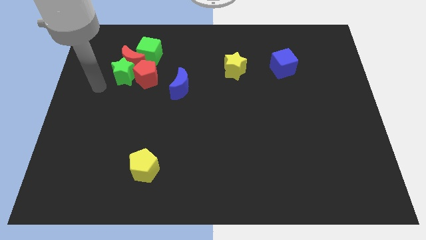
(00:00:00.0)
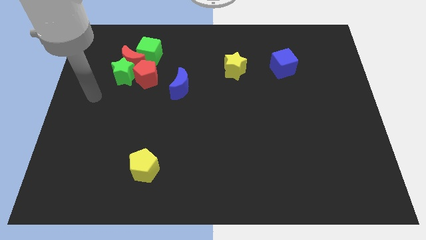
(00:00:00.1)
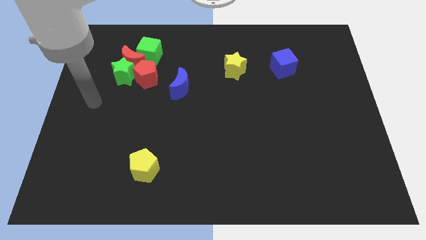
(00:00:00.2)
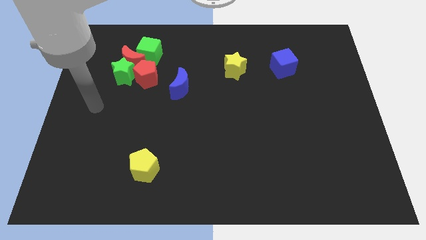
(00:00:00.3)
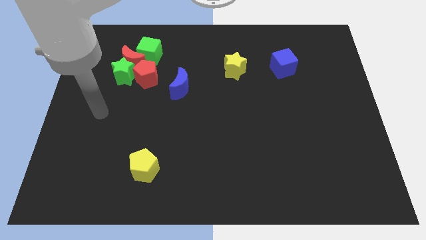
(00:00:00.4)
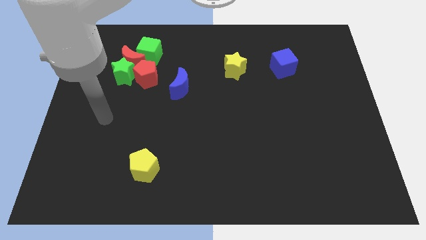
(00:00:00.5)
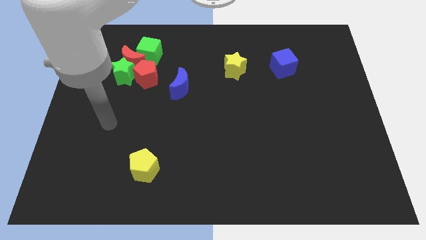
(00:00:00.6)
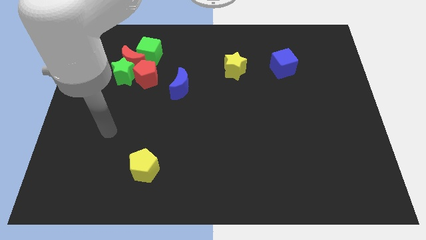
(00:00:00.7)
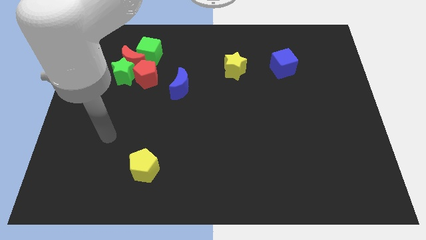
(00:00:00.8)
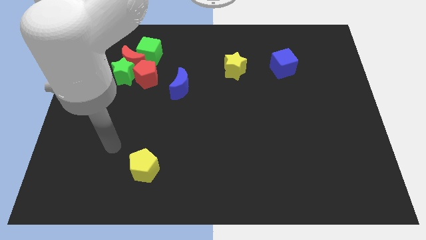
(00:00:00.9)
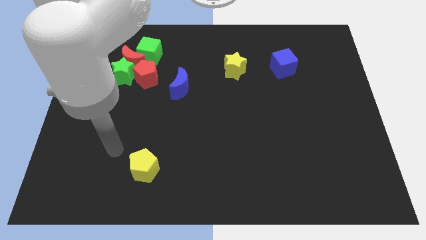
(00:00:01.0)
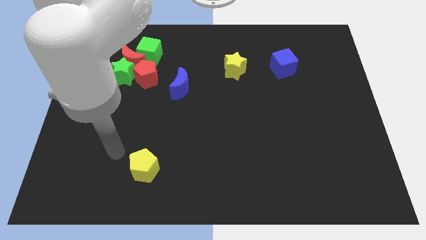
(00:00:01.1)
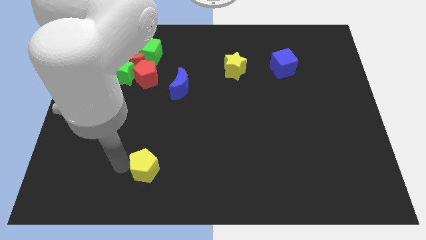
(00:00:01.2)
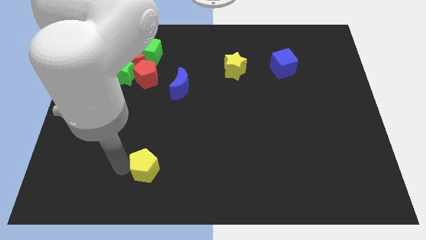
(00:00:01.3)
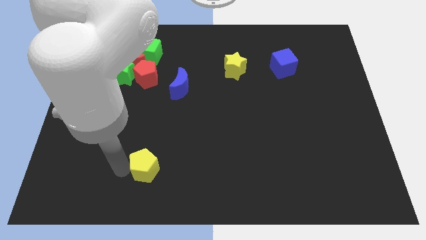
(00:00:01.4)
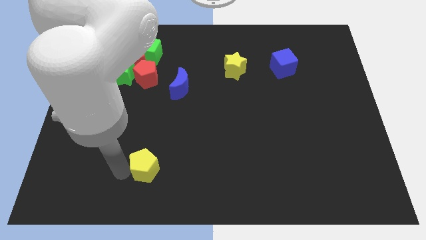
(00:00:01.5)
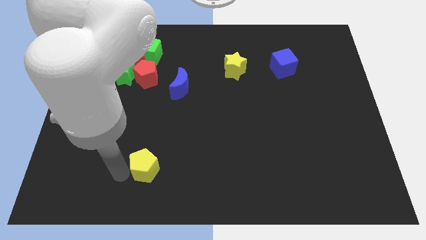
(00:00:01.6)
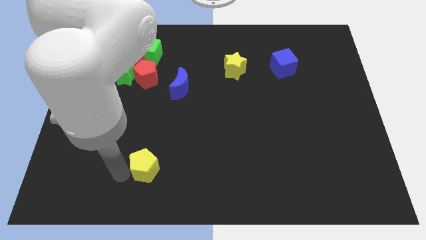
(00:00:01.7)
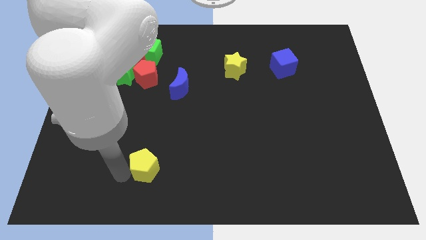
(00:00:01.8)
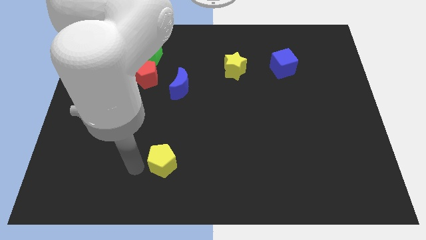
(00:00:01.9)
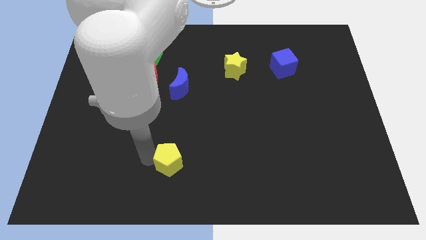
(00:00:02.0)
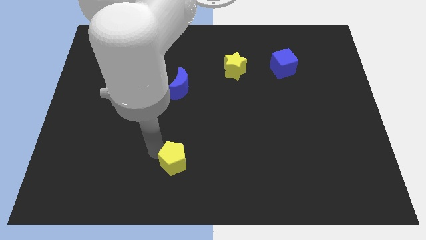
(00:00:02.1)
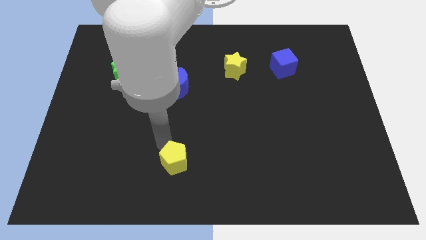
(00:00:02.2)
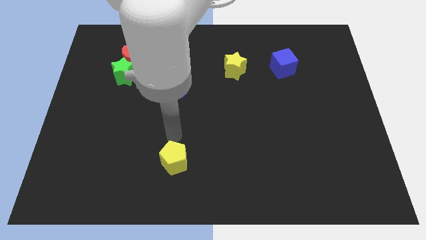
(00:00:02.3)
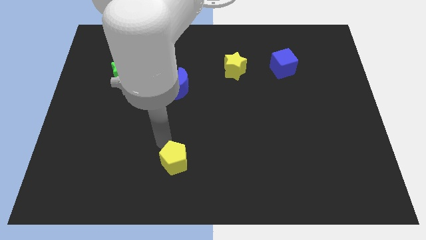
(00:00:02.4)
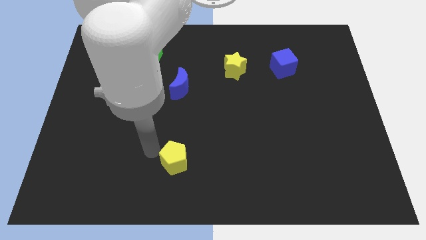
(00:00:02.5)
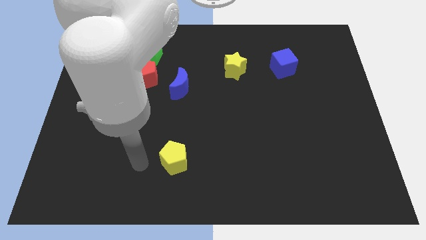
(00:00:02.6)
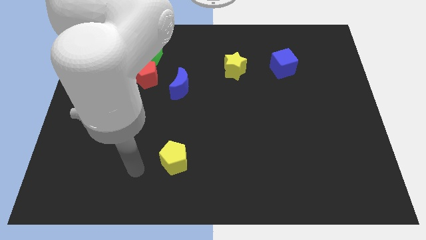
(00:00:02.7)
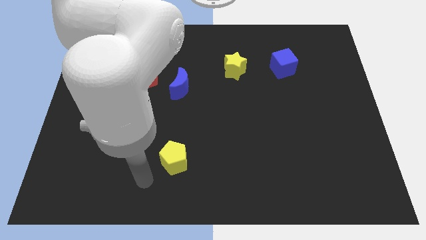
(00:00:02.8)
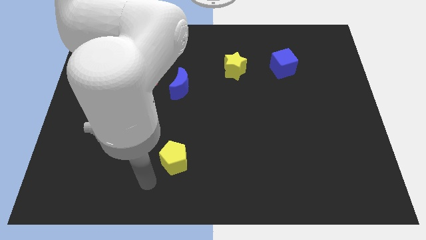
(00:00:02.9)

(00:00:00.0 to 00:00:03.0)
move the yellow pentagon towards the right side of the board

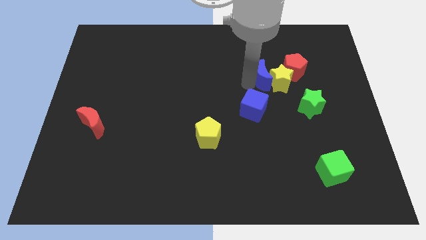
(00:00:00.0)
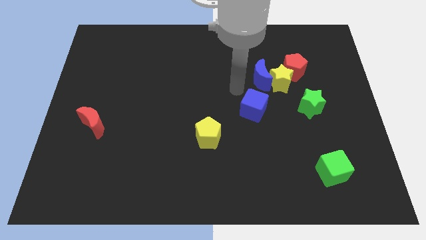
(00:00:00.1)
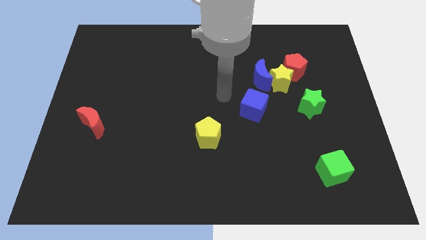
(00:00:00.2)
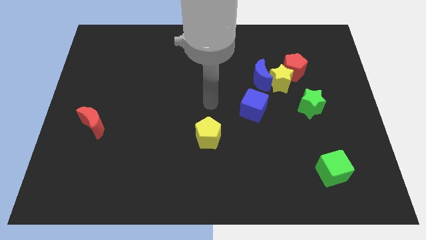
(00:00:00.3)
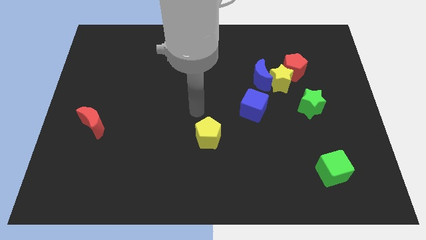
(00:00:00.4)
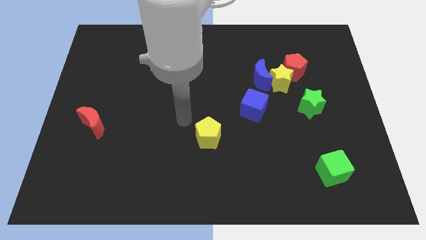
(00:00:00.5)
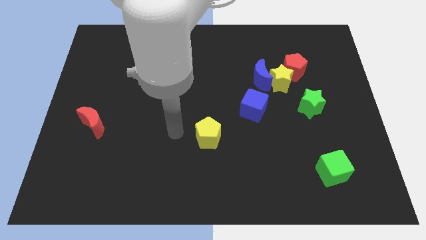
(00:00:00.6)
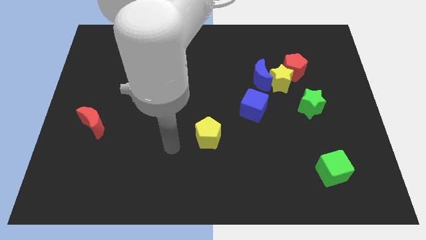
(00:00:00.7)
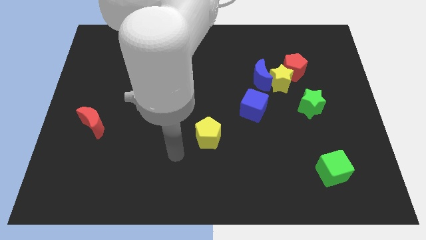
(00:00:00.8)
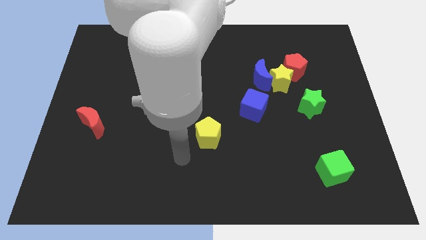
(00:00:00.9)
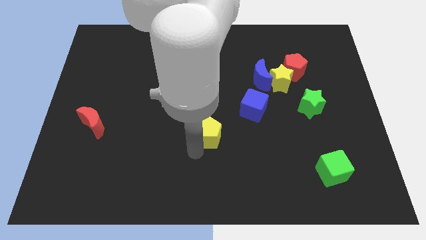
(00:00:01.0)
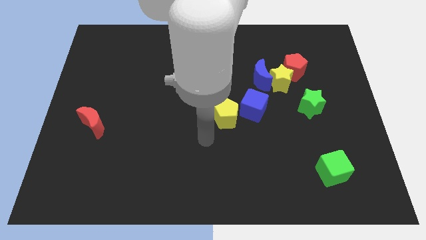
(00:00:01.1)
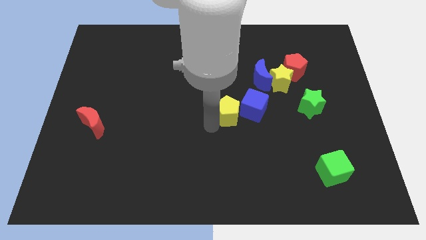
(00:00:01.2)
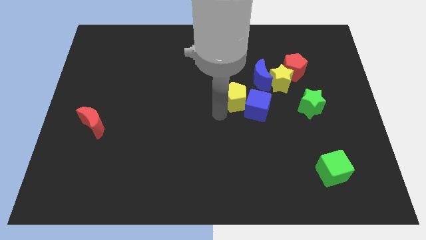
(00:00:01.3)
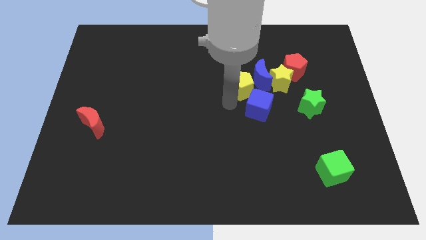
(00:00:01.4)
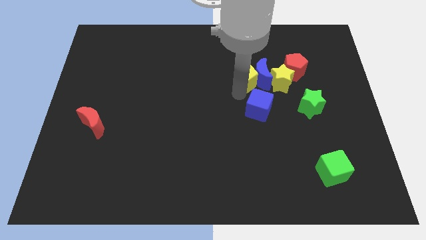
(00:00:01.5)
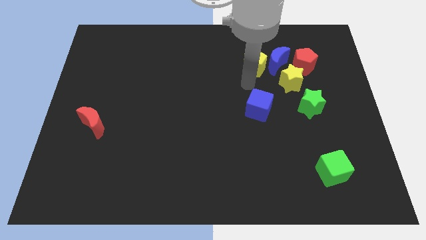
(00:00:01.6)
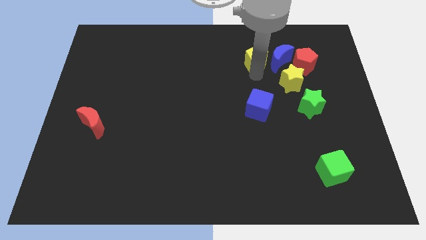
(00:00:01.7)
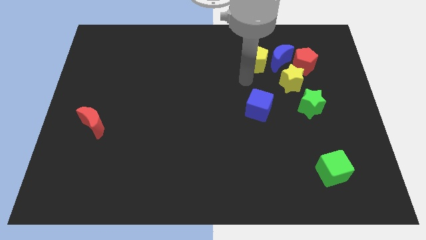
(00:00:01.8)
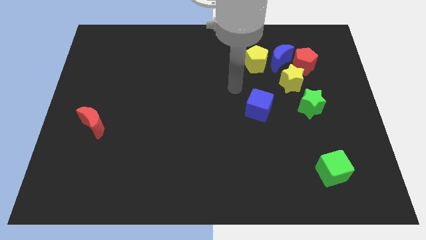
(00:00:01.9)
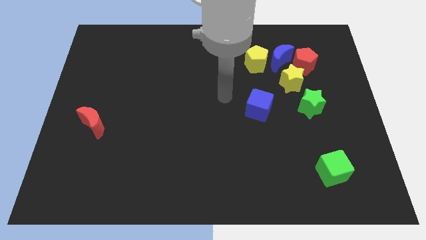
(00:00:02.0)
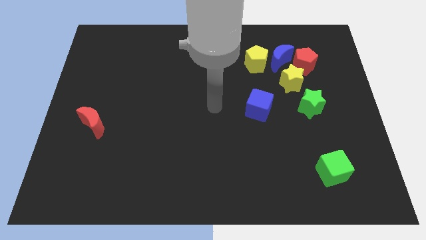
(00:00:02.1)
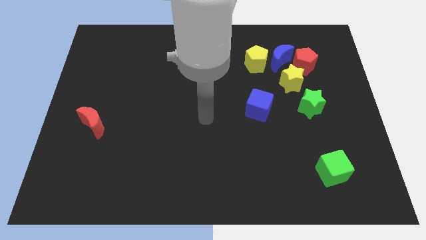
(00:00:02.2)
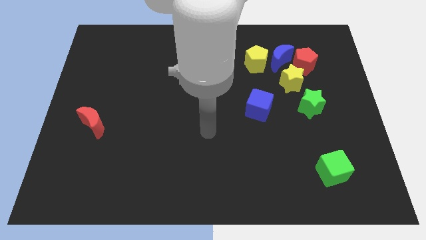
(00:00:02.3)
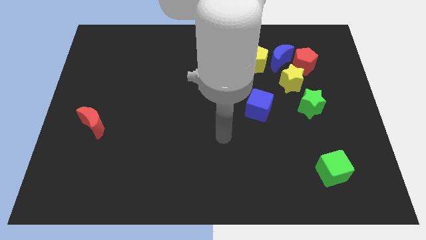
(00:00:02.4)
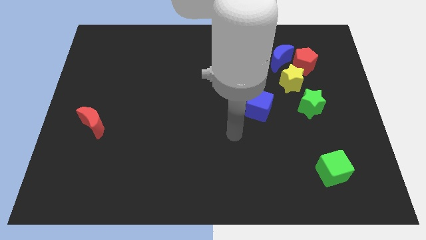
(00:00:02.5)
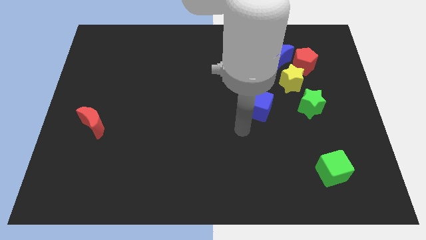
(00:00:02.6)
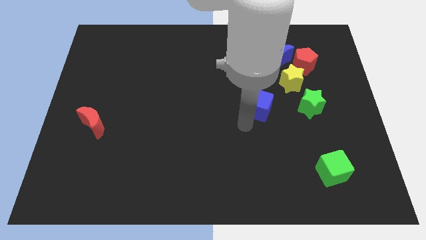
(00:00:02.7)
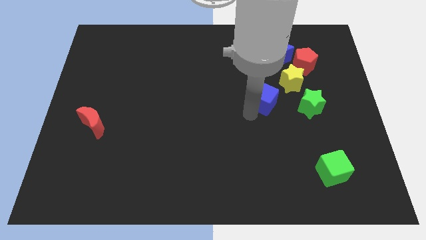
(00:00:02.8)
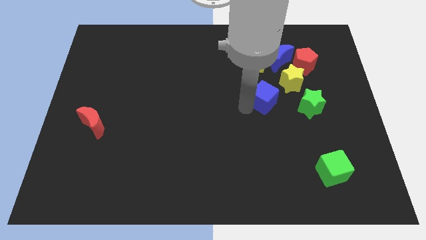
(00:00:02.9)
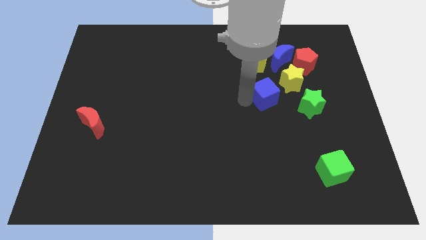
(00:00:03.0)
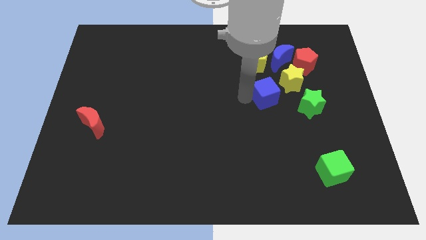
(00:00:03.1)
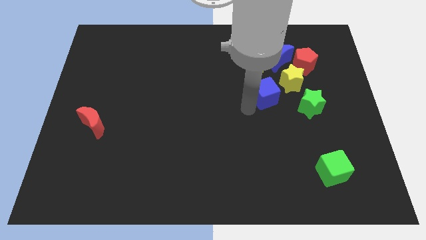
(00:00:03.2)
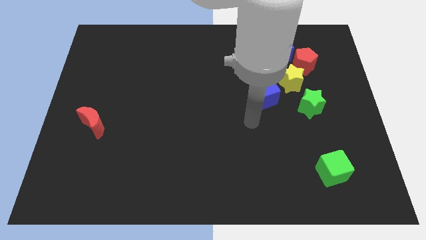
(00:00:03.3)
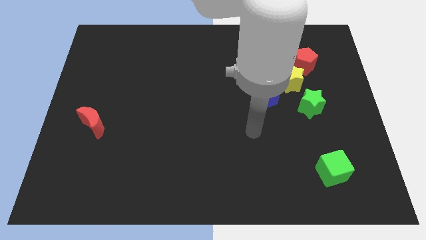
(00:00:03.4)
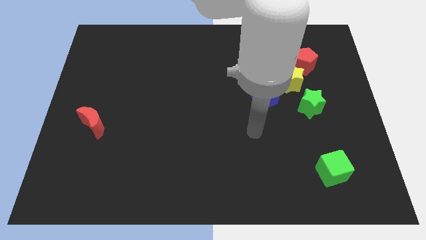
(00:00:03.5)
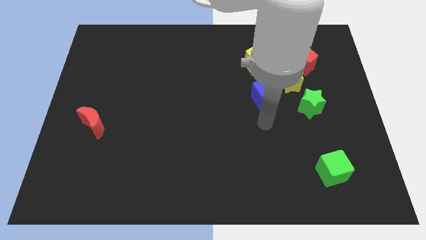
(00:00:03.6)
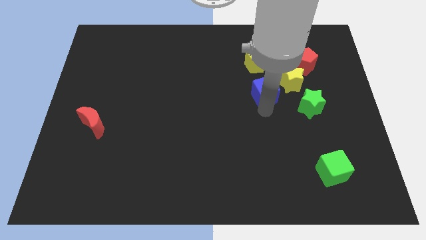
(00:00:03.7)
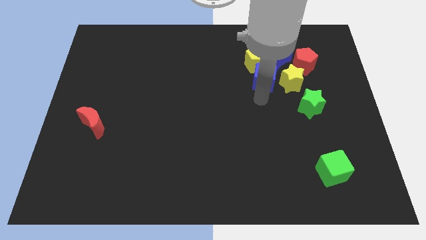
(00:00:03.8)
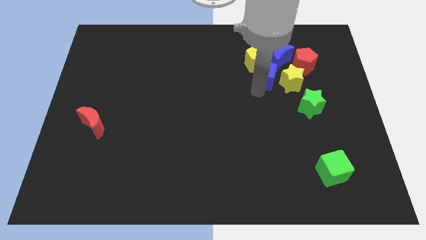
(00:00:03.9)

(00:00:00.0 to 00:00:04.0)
place the blue cube to the left of the yellow star

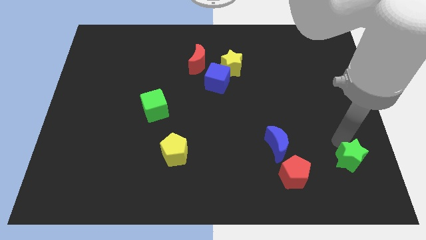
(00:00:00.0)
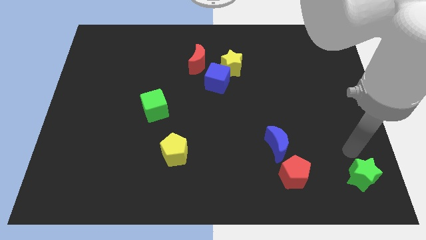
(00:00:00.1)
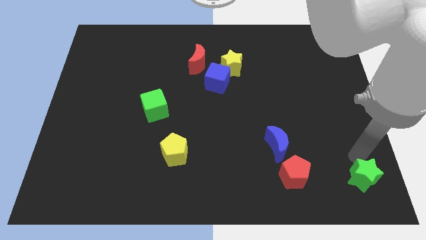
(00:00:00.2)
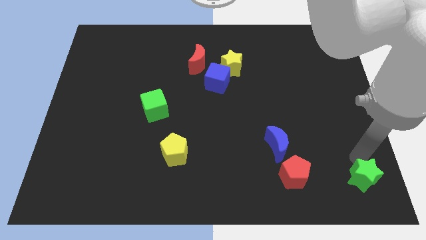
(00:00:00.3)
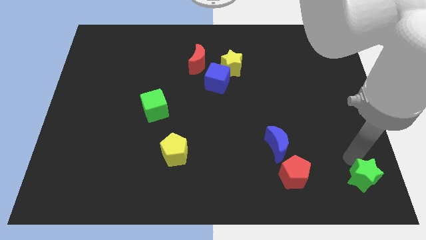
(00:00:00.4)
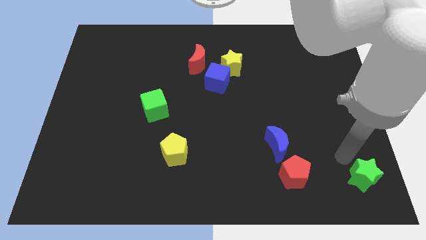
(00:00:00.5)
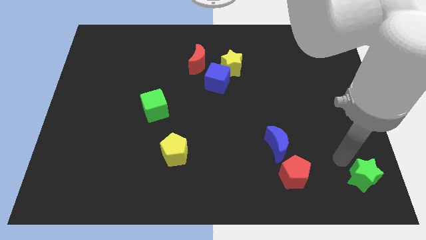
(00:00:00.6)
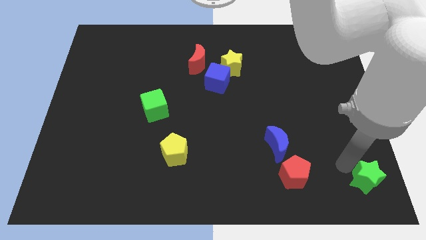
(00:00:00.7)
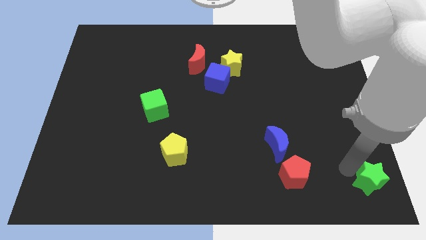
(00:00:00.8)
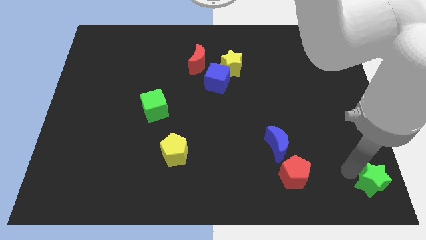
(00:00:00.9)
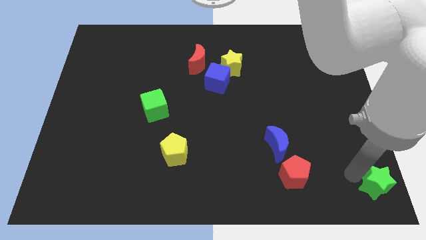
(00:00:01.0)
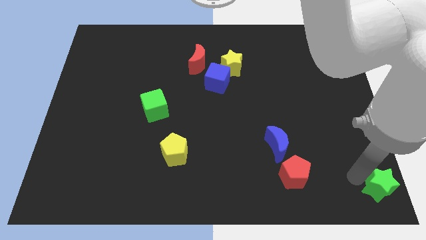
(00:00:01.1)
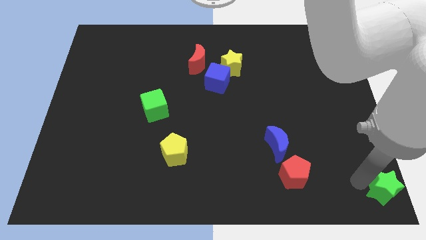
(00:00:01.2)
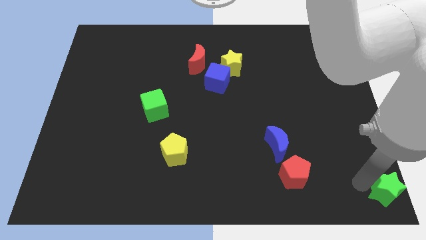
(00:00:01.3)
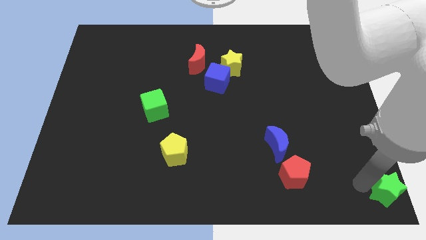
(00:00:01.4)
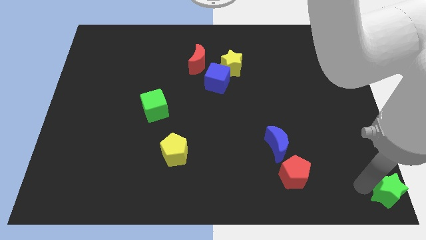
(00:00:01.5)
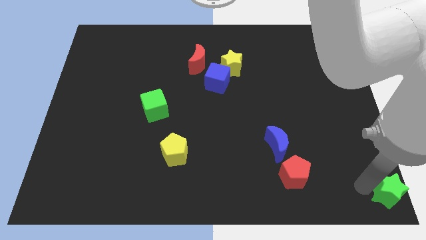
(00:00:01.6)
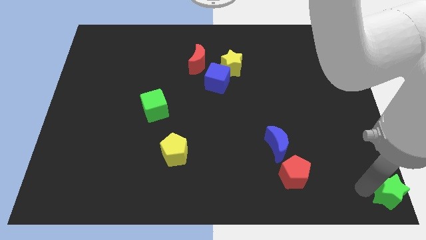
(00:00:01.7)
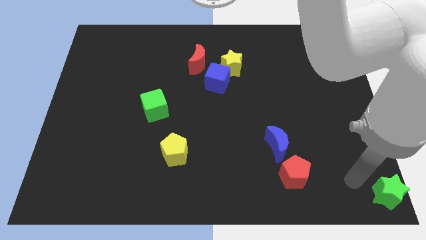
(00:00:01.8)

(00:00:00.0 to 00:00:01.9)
push the green to the bottom right corner of the board
